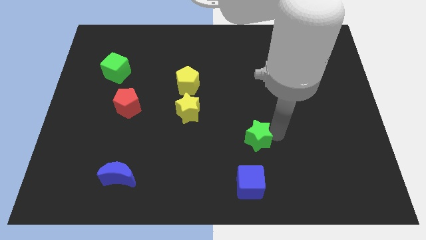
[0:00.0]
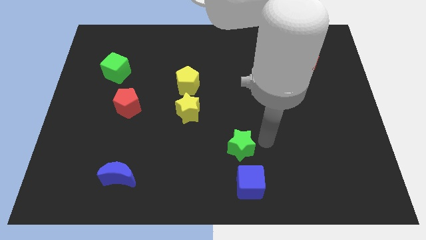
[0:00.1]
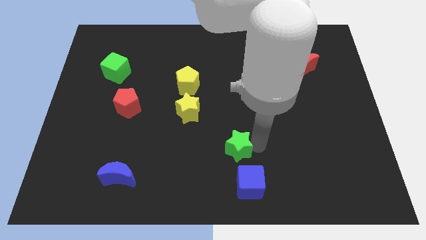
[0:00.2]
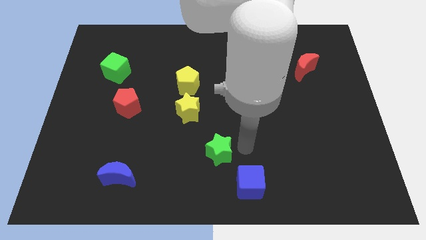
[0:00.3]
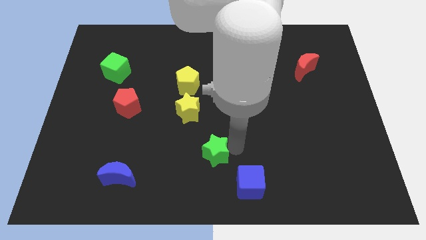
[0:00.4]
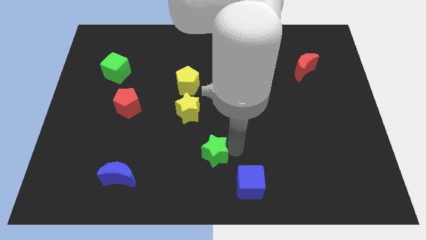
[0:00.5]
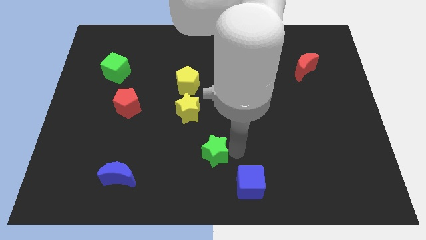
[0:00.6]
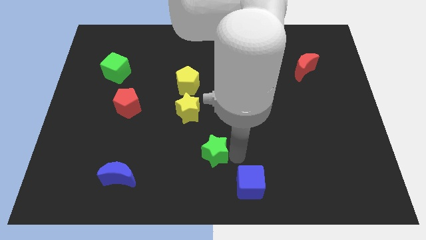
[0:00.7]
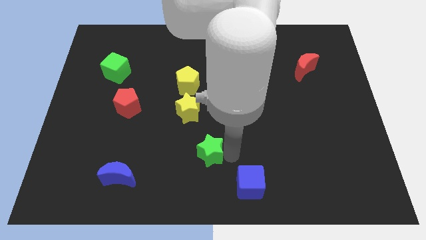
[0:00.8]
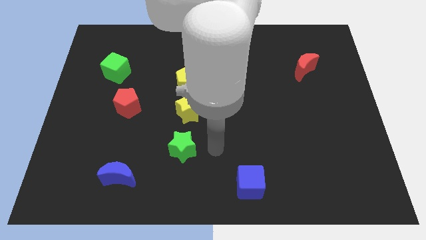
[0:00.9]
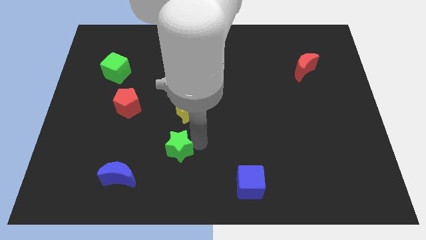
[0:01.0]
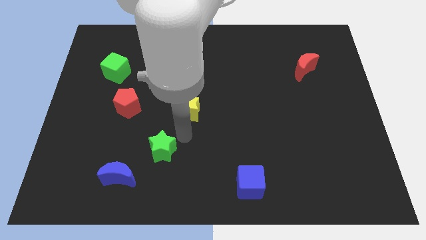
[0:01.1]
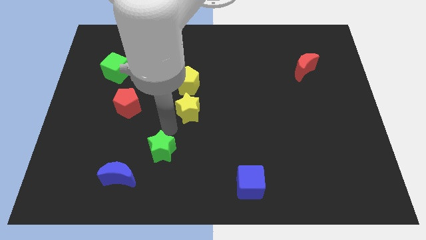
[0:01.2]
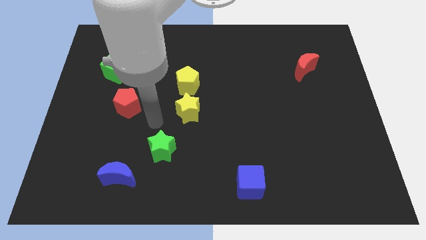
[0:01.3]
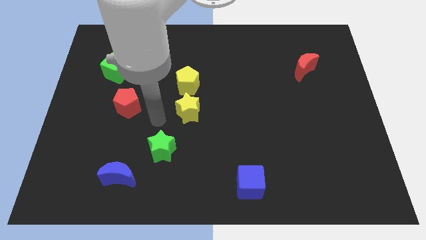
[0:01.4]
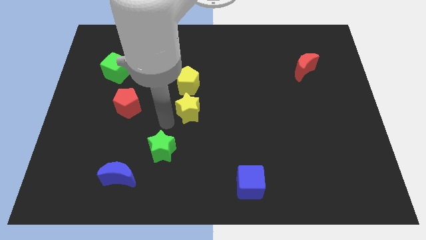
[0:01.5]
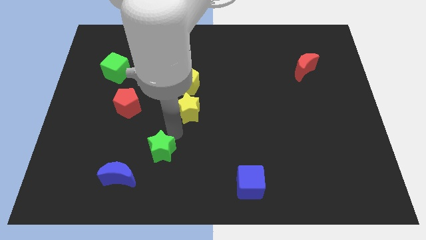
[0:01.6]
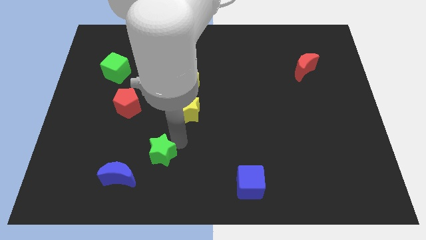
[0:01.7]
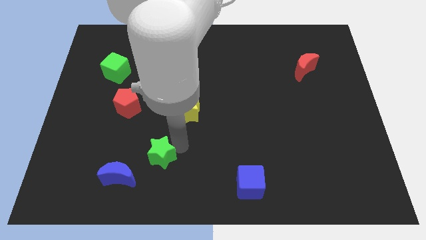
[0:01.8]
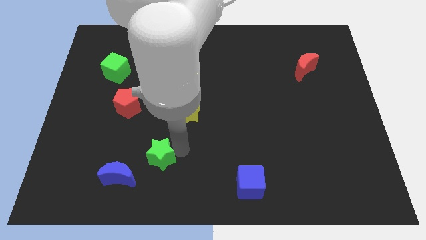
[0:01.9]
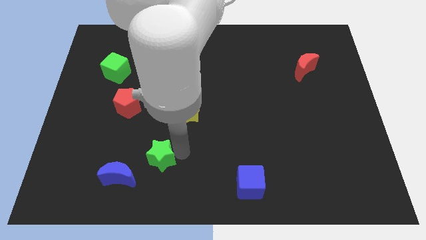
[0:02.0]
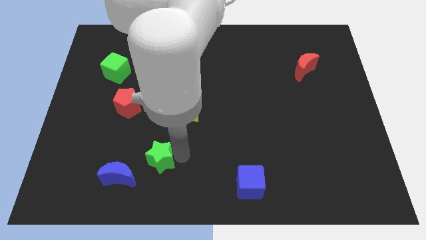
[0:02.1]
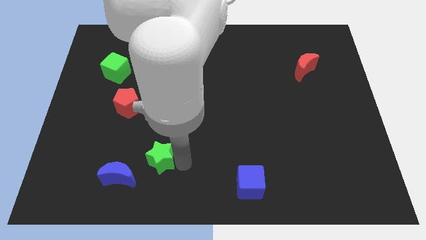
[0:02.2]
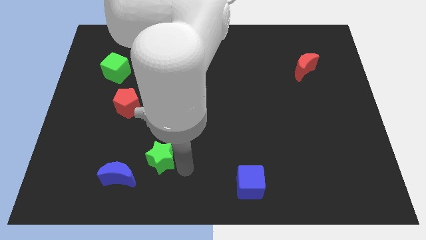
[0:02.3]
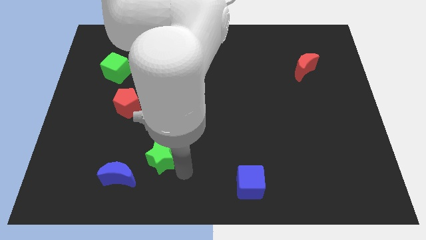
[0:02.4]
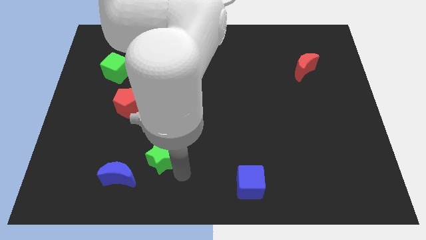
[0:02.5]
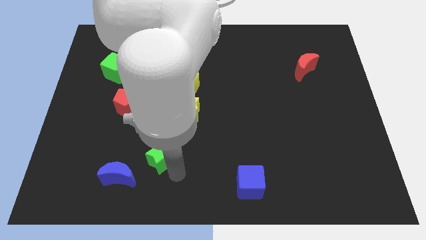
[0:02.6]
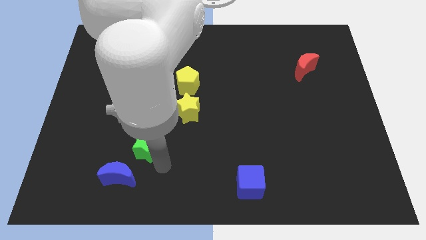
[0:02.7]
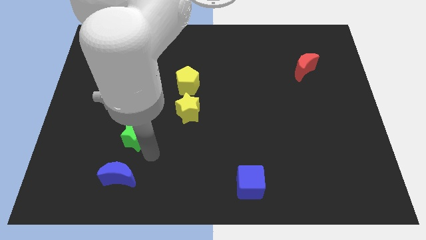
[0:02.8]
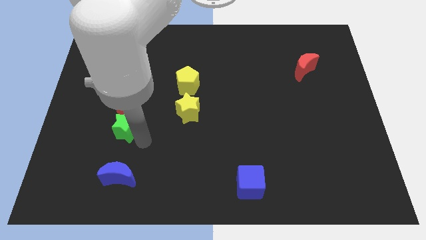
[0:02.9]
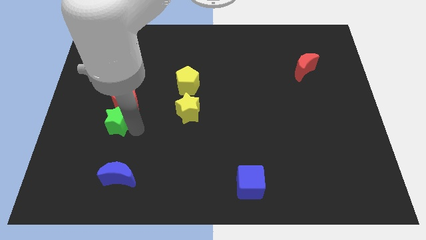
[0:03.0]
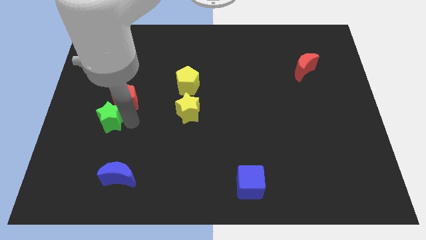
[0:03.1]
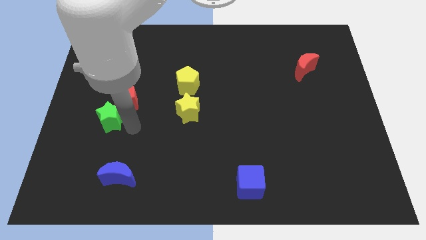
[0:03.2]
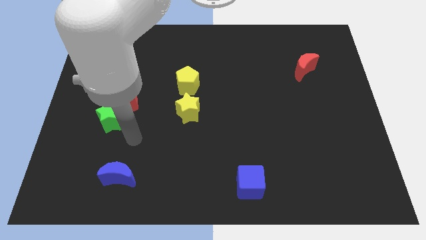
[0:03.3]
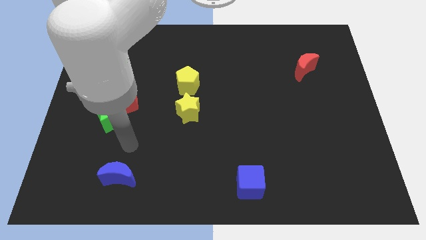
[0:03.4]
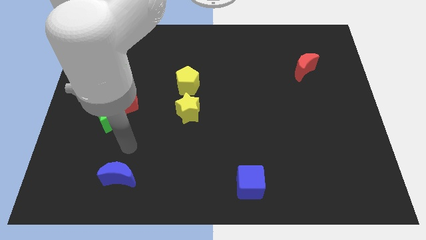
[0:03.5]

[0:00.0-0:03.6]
push the green star into the red pentagon

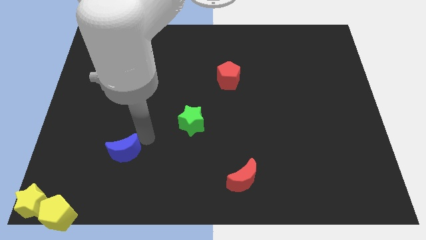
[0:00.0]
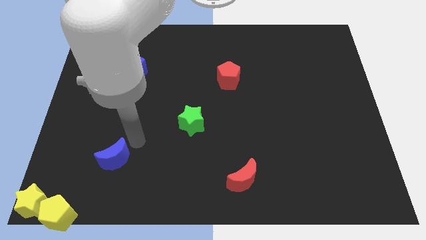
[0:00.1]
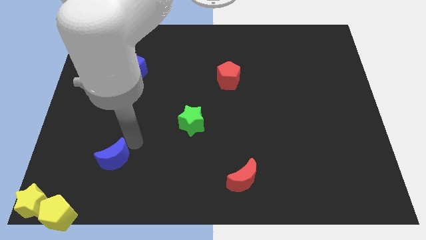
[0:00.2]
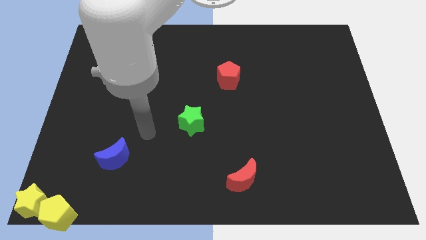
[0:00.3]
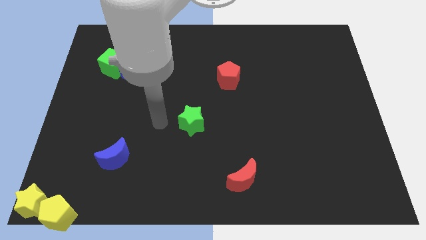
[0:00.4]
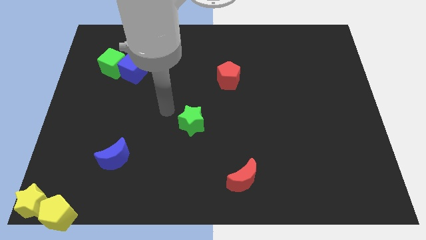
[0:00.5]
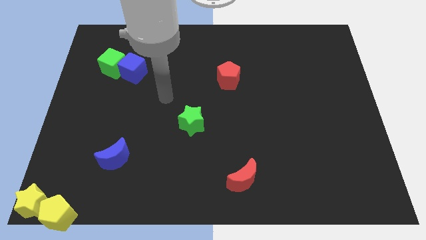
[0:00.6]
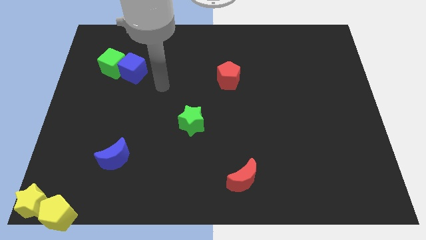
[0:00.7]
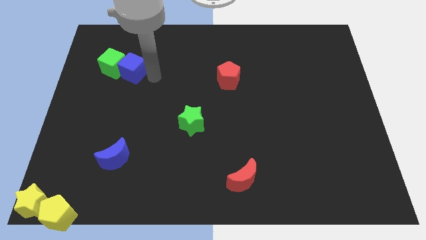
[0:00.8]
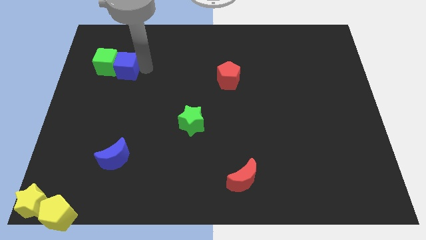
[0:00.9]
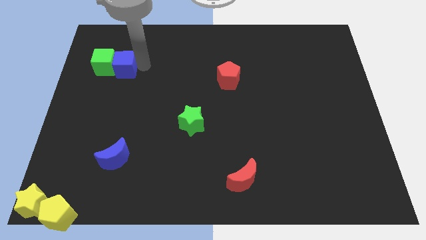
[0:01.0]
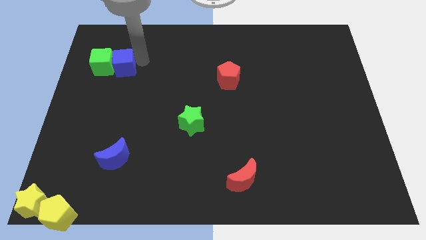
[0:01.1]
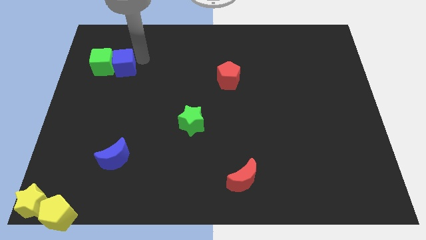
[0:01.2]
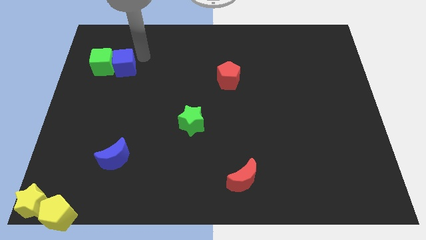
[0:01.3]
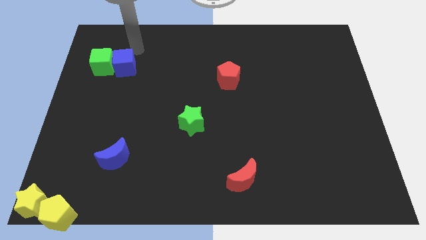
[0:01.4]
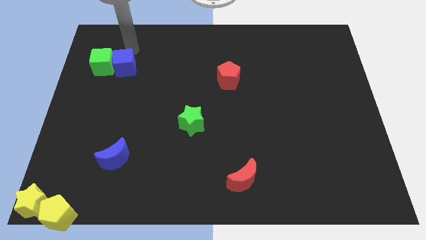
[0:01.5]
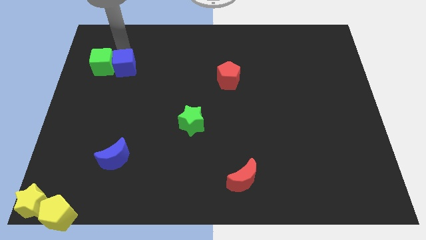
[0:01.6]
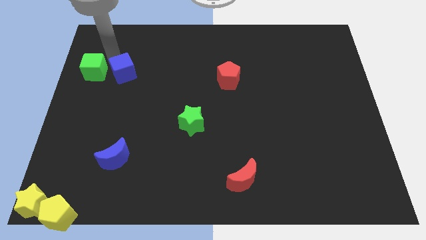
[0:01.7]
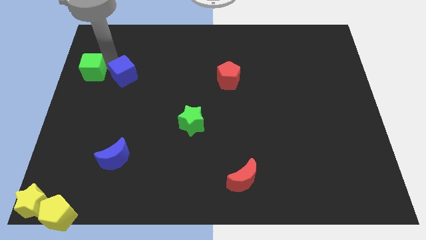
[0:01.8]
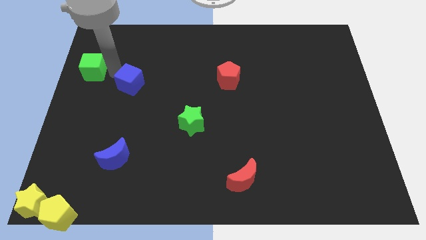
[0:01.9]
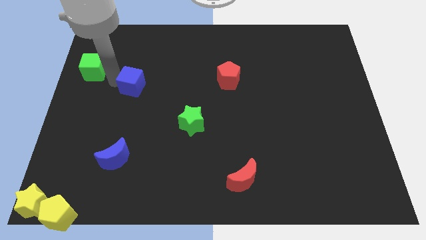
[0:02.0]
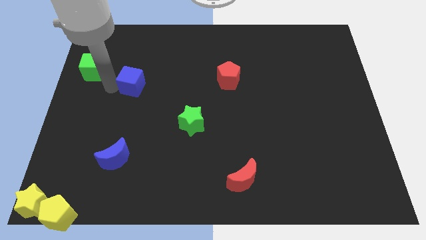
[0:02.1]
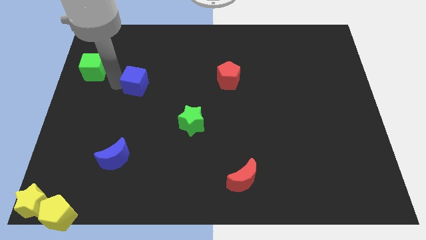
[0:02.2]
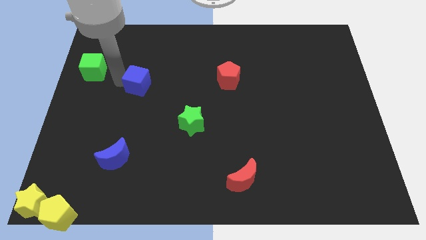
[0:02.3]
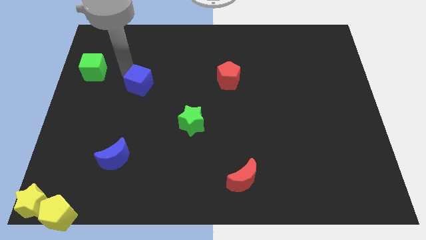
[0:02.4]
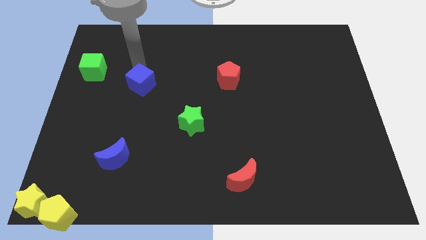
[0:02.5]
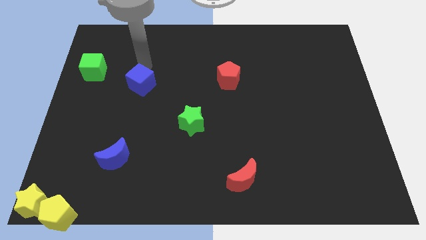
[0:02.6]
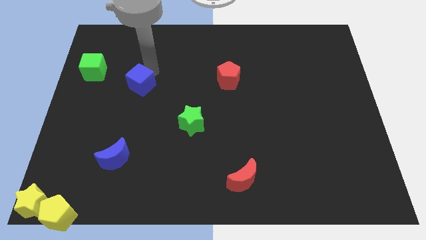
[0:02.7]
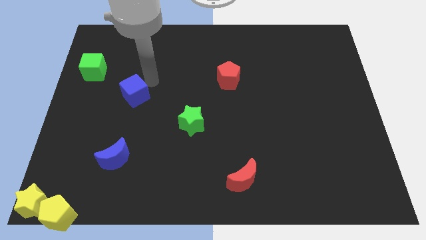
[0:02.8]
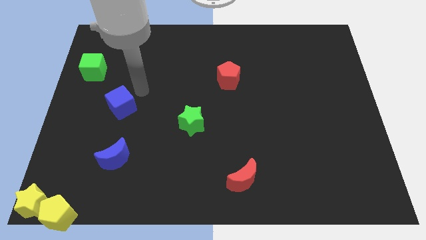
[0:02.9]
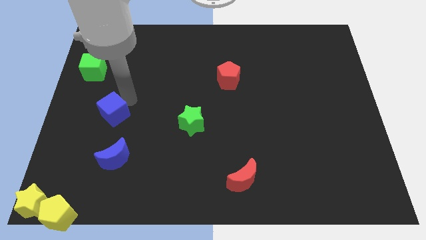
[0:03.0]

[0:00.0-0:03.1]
separate the blue cube and green cube

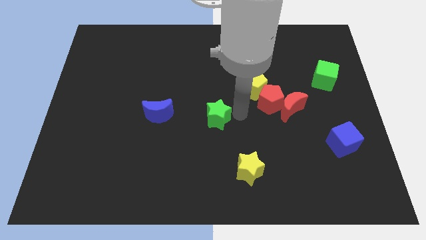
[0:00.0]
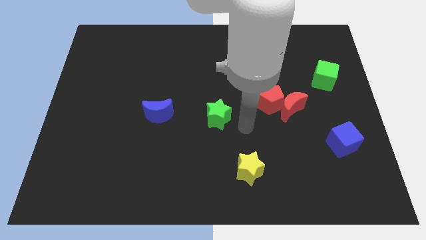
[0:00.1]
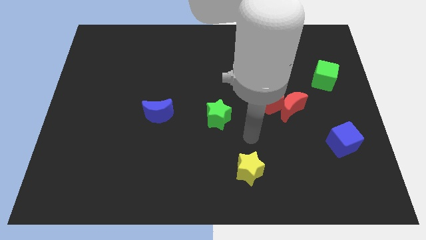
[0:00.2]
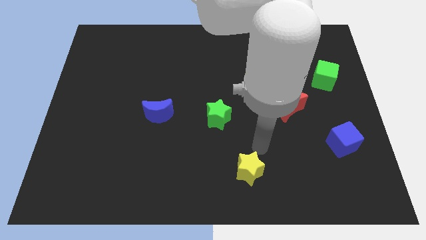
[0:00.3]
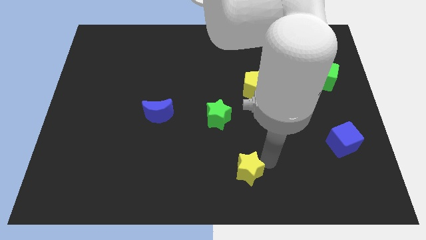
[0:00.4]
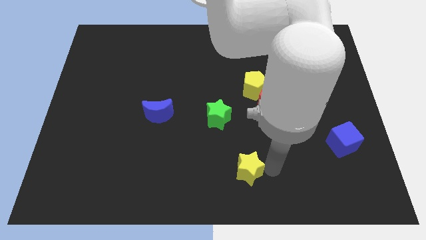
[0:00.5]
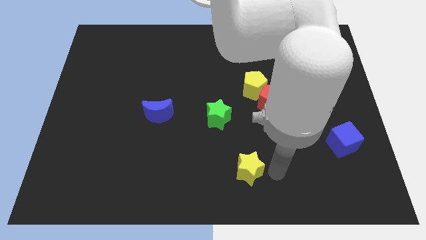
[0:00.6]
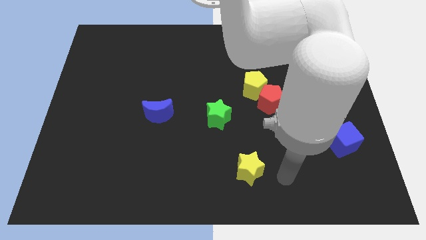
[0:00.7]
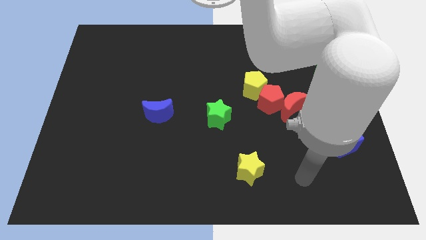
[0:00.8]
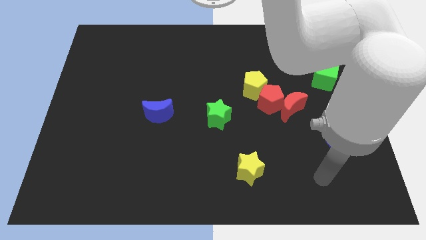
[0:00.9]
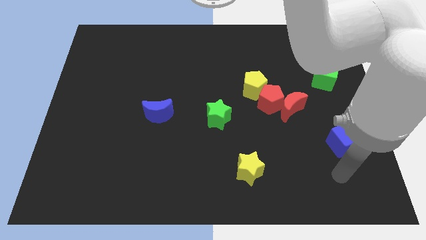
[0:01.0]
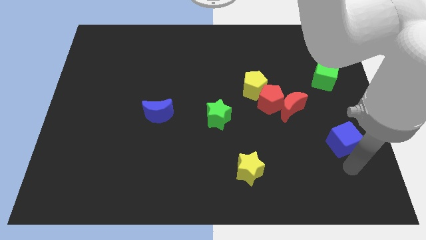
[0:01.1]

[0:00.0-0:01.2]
point the arm at the bottom side of the blue cube

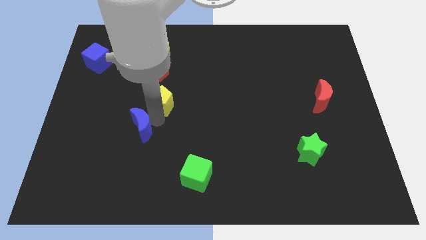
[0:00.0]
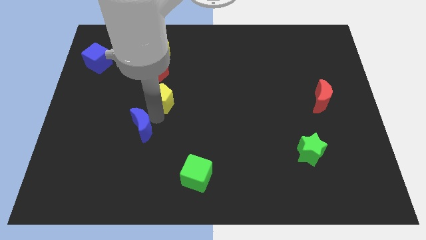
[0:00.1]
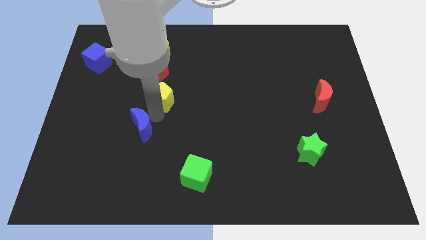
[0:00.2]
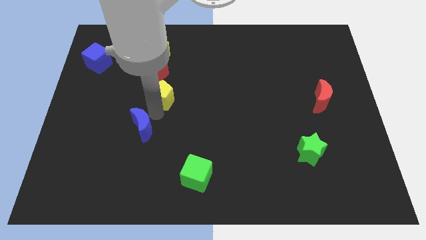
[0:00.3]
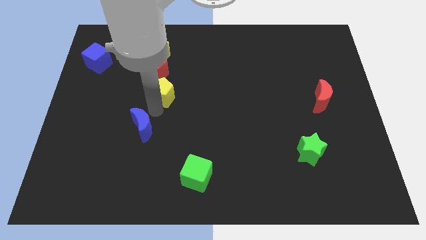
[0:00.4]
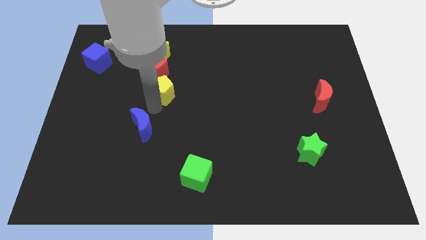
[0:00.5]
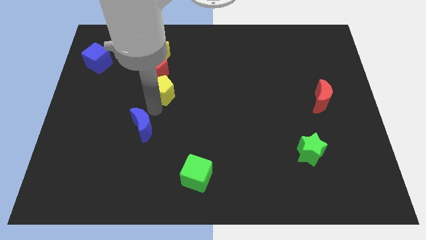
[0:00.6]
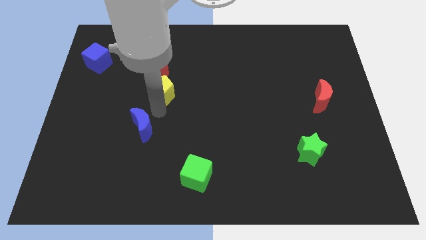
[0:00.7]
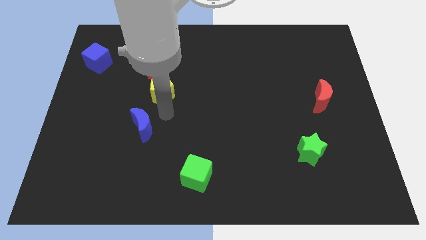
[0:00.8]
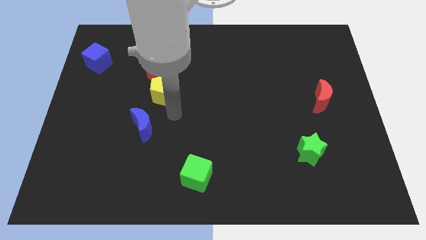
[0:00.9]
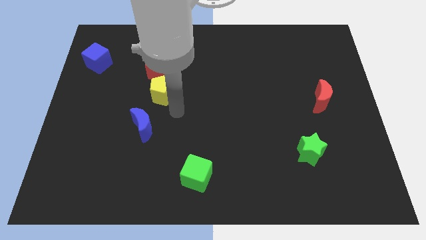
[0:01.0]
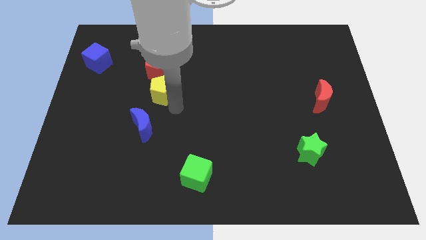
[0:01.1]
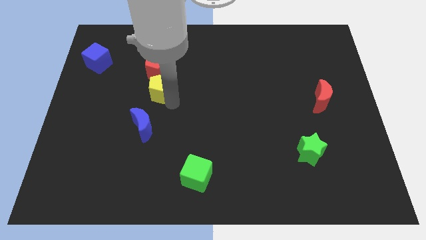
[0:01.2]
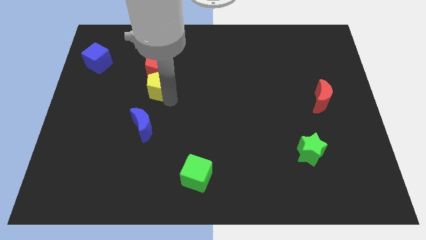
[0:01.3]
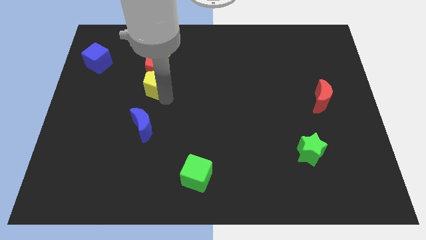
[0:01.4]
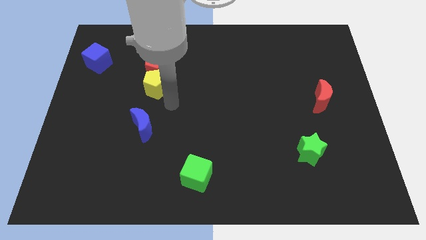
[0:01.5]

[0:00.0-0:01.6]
put yellow pentagon below red pentagon
